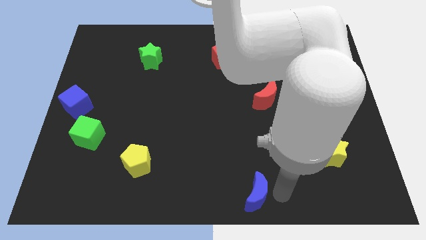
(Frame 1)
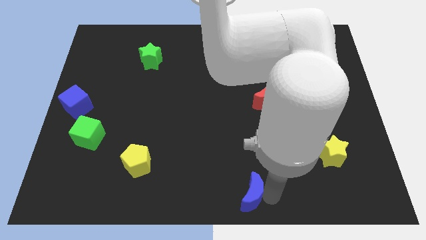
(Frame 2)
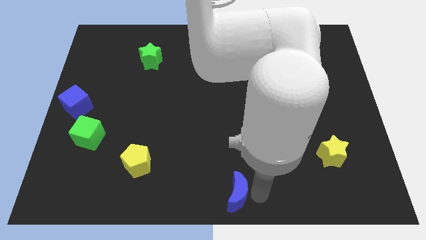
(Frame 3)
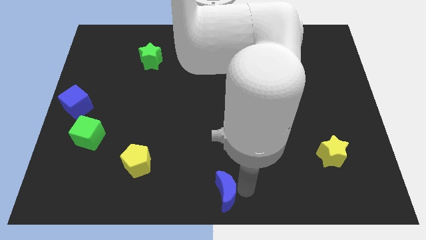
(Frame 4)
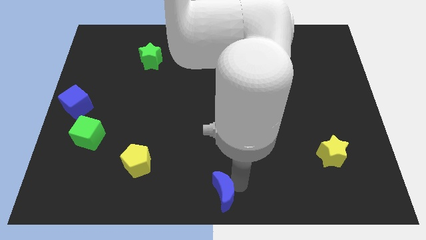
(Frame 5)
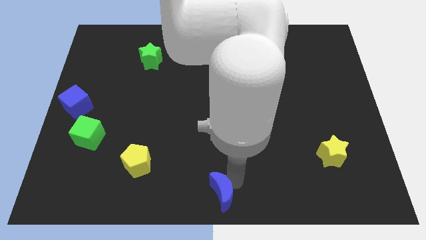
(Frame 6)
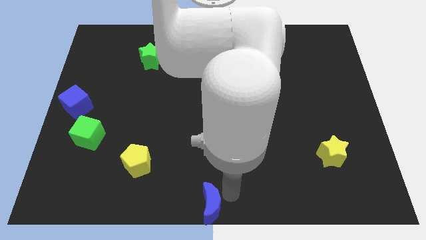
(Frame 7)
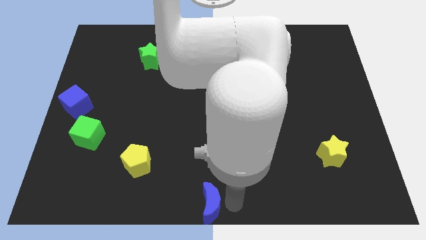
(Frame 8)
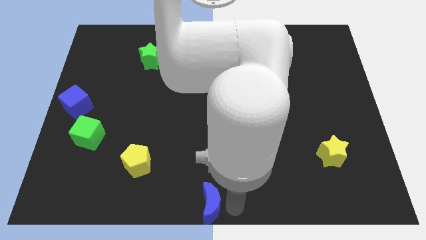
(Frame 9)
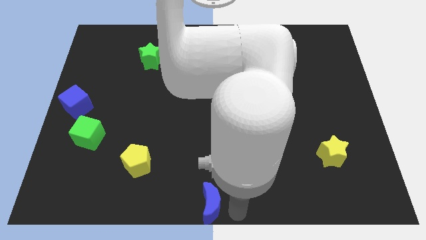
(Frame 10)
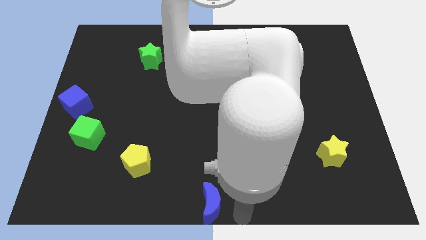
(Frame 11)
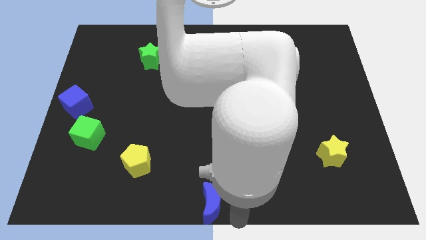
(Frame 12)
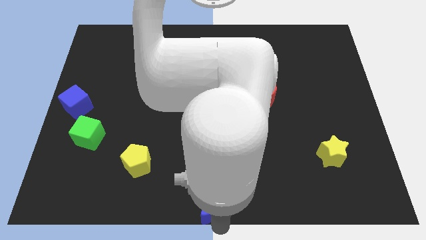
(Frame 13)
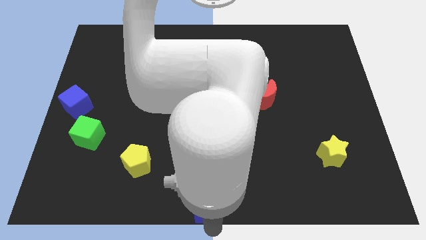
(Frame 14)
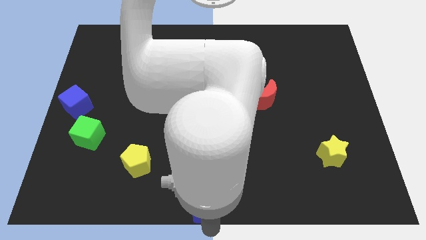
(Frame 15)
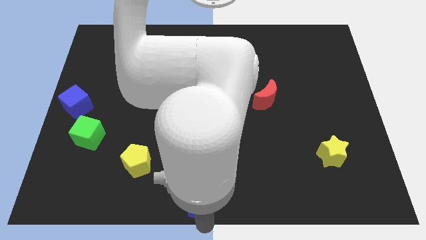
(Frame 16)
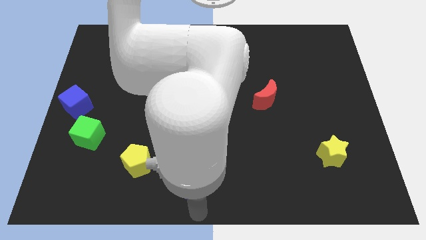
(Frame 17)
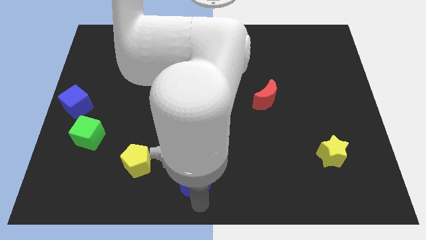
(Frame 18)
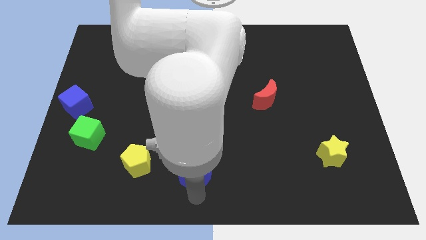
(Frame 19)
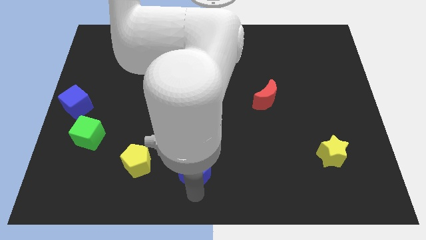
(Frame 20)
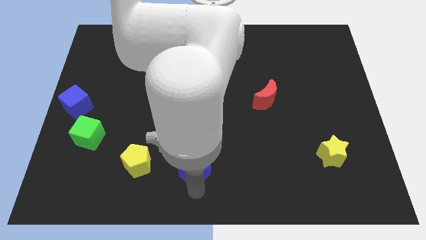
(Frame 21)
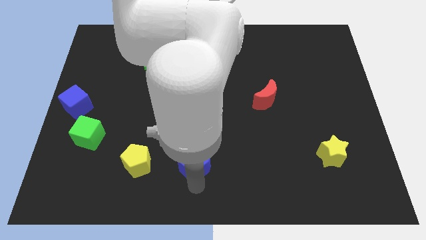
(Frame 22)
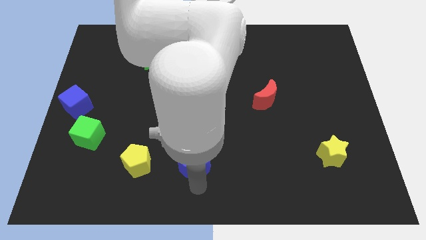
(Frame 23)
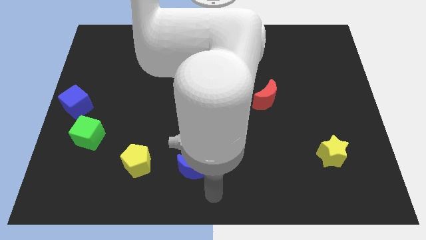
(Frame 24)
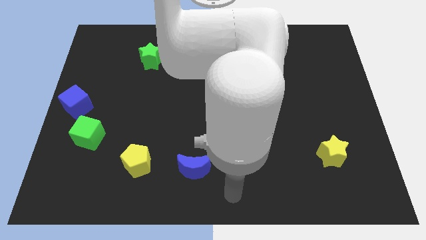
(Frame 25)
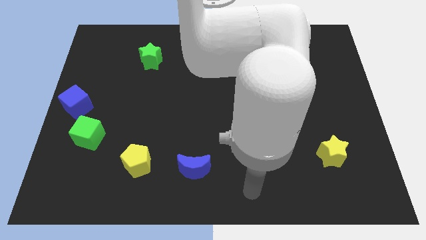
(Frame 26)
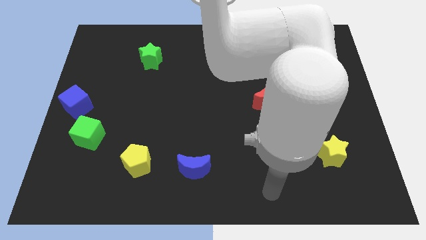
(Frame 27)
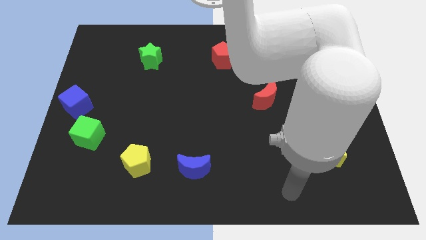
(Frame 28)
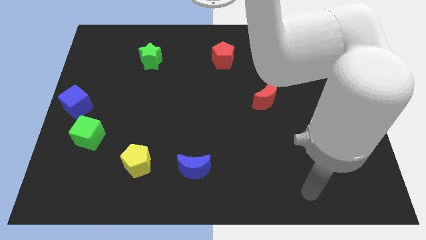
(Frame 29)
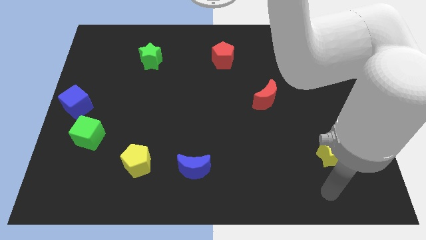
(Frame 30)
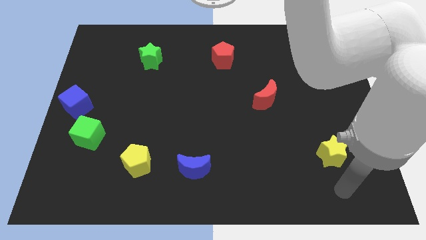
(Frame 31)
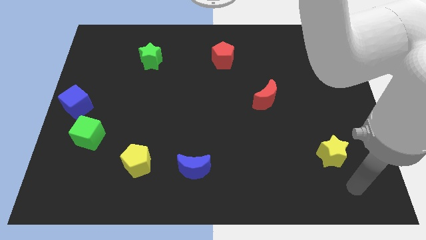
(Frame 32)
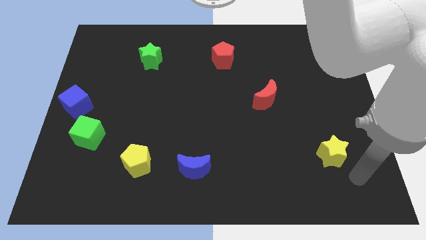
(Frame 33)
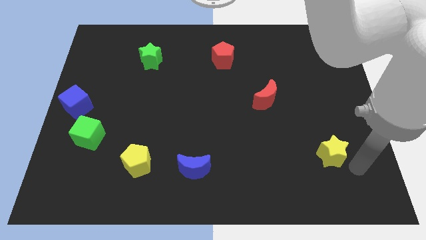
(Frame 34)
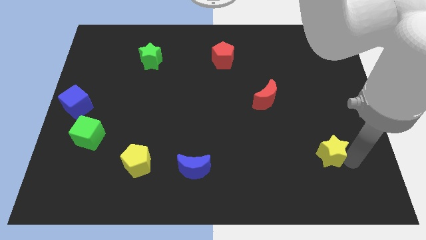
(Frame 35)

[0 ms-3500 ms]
place the blue crescent to the right side of the yellow pentagon

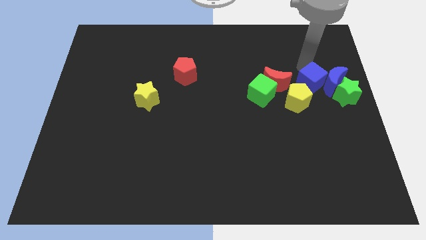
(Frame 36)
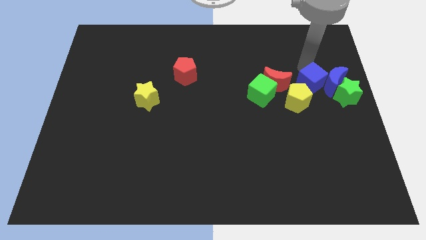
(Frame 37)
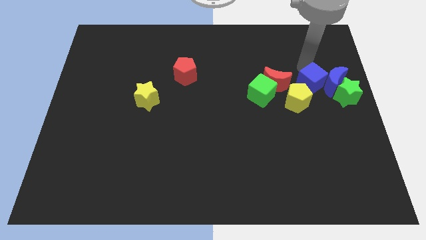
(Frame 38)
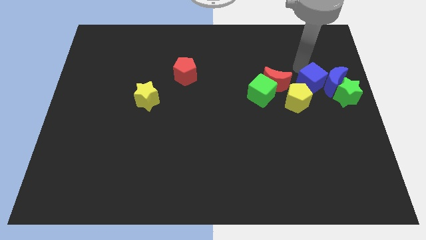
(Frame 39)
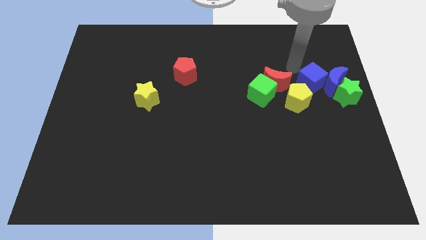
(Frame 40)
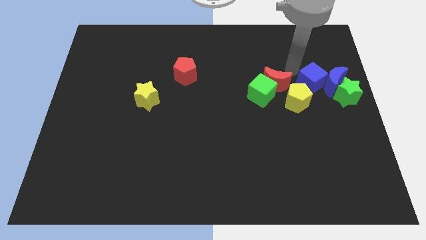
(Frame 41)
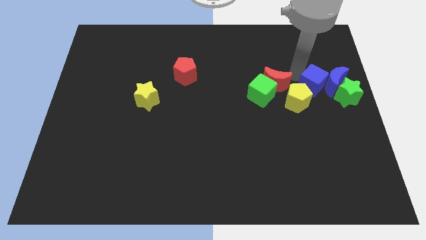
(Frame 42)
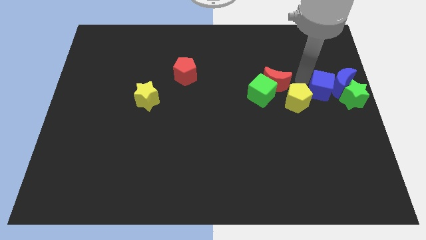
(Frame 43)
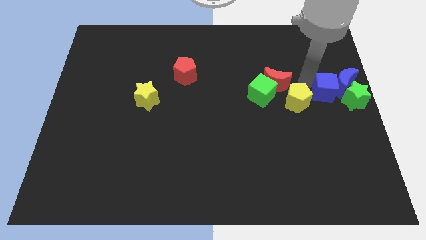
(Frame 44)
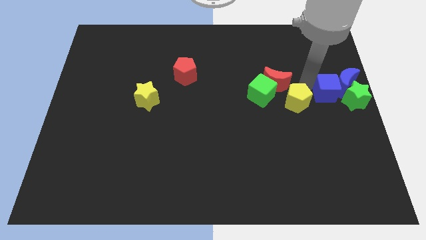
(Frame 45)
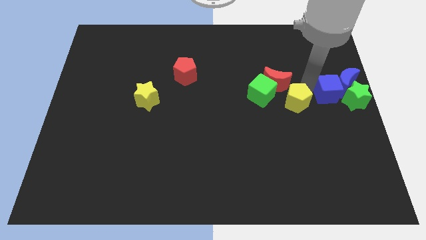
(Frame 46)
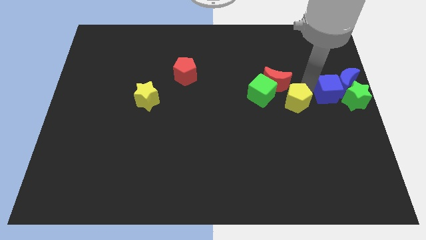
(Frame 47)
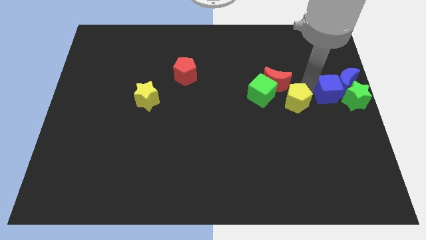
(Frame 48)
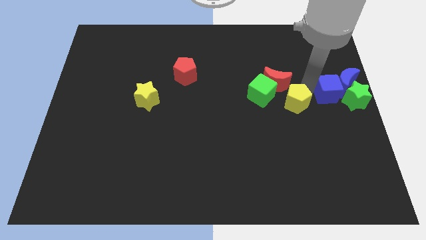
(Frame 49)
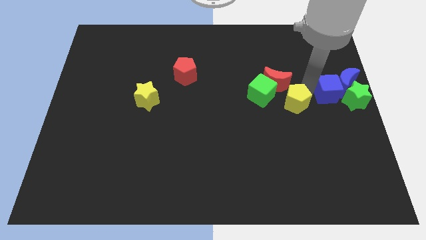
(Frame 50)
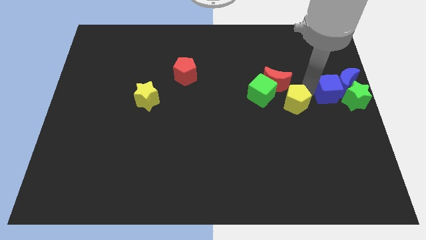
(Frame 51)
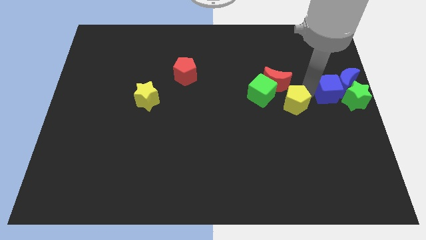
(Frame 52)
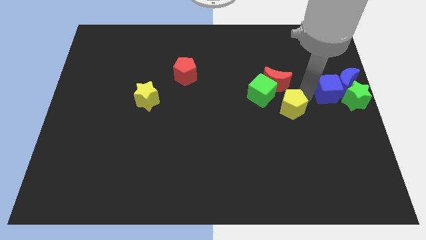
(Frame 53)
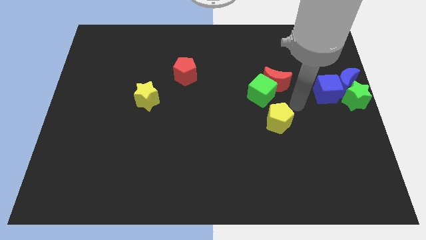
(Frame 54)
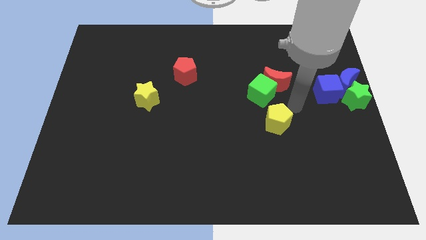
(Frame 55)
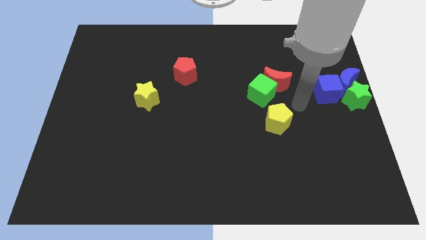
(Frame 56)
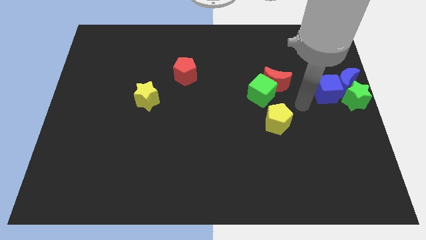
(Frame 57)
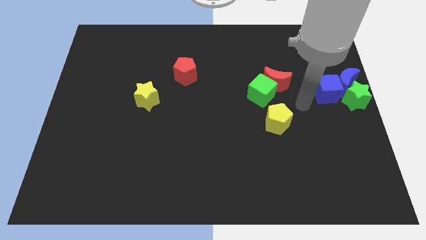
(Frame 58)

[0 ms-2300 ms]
move the yellow pentagon away from the blue cube

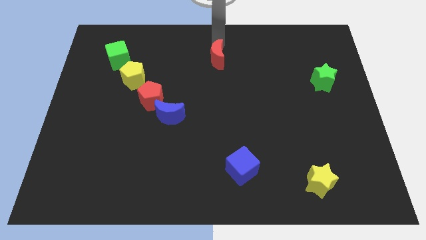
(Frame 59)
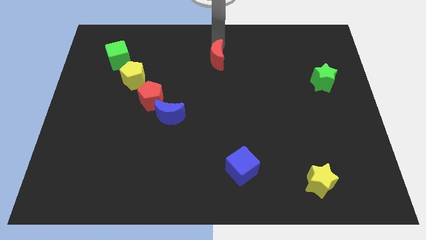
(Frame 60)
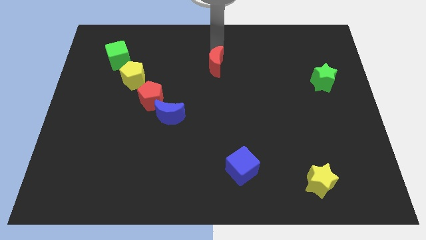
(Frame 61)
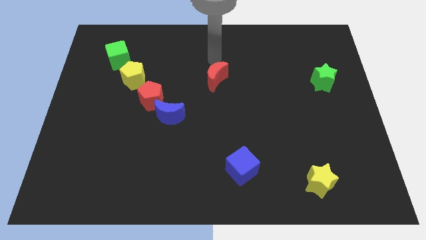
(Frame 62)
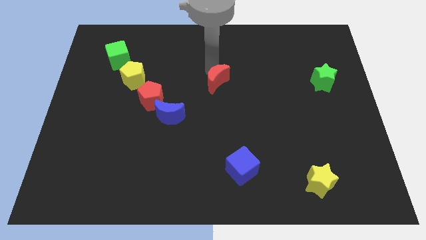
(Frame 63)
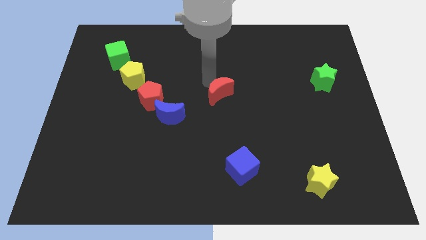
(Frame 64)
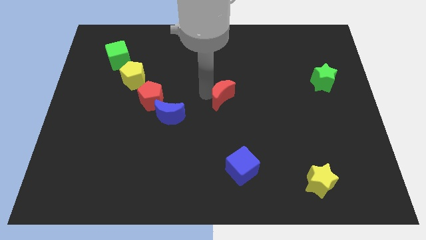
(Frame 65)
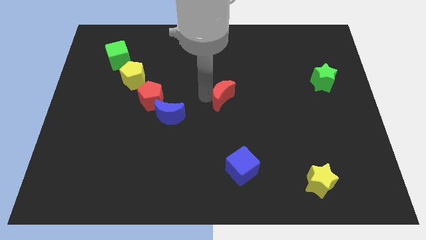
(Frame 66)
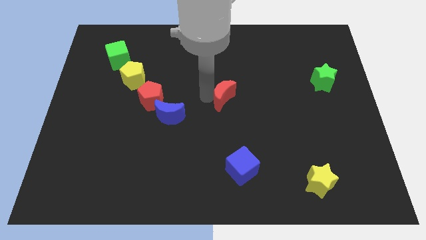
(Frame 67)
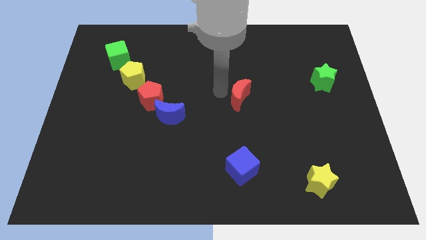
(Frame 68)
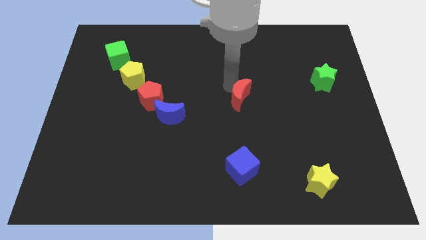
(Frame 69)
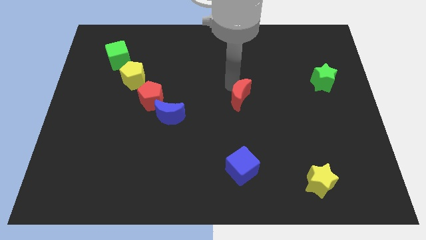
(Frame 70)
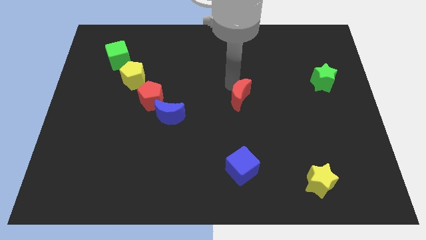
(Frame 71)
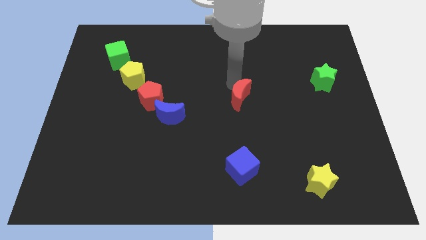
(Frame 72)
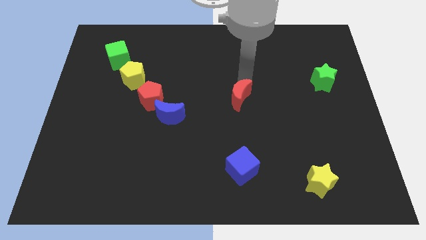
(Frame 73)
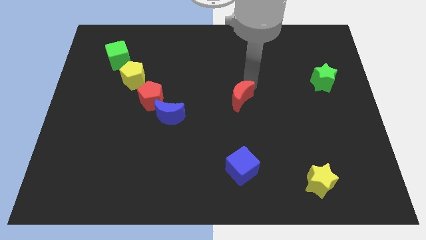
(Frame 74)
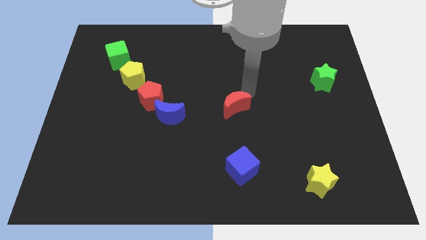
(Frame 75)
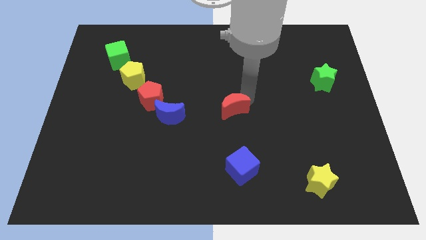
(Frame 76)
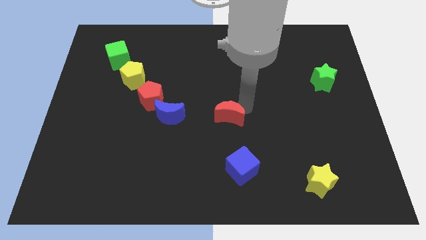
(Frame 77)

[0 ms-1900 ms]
place the red moon to the center of the board

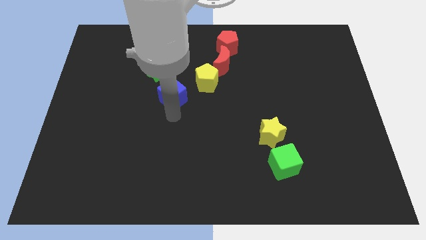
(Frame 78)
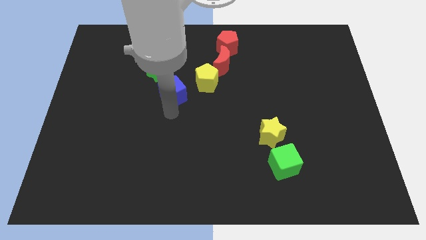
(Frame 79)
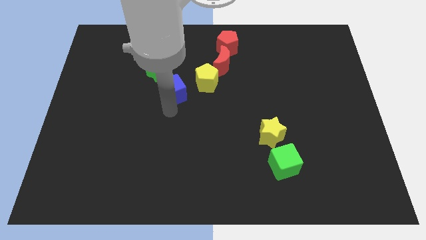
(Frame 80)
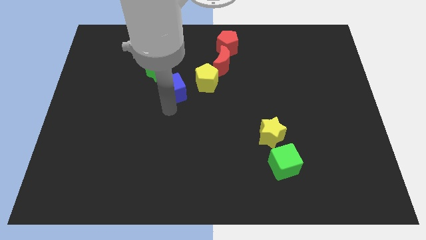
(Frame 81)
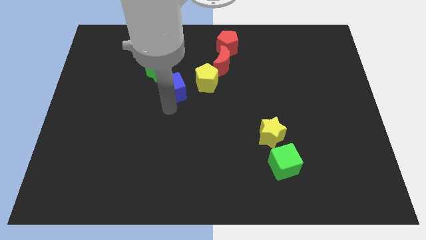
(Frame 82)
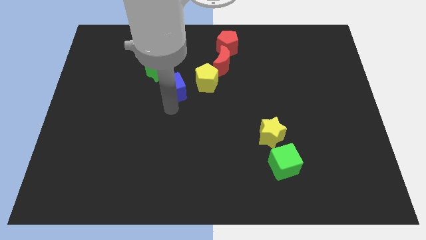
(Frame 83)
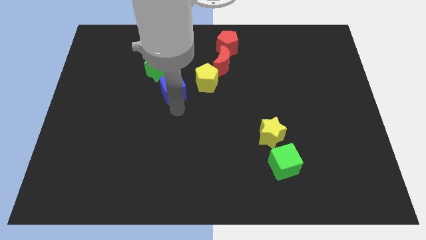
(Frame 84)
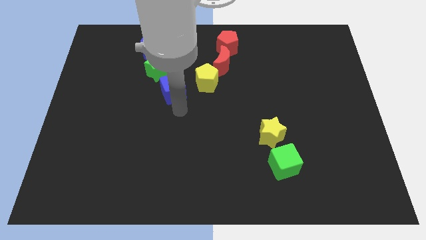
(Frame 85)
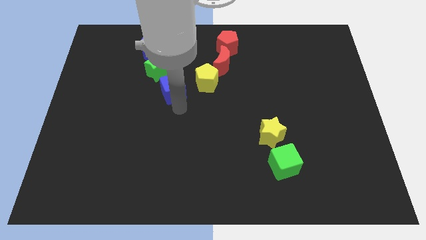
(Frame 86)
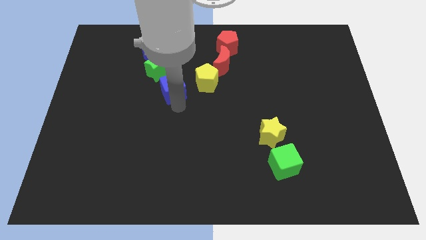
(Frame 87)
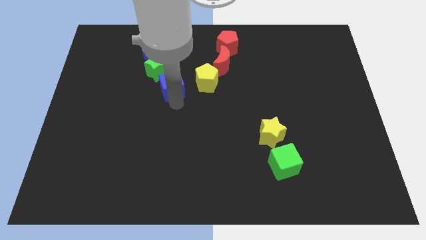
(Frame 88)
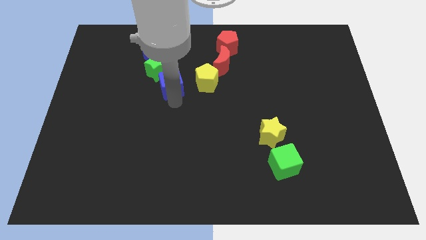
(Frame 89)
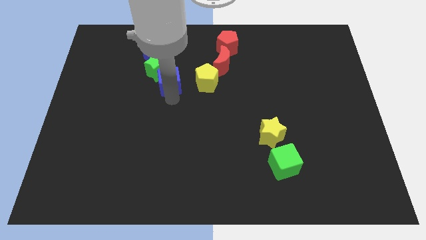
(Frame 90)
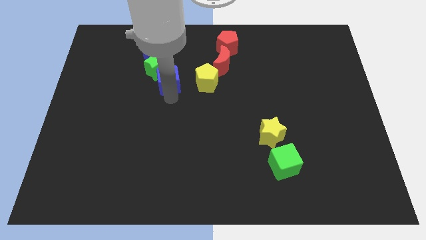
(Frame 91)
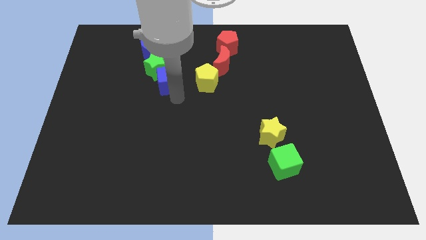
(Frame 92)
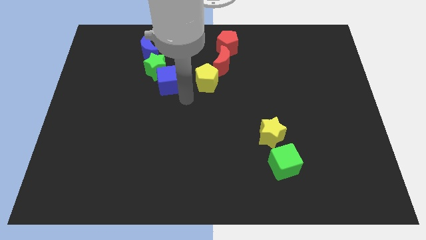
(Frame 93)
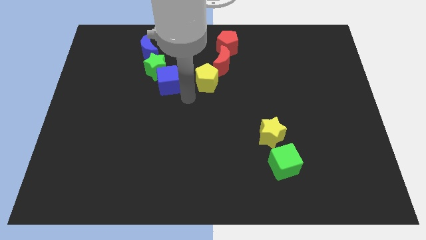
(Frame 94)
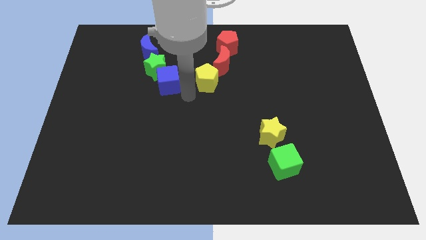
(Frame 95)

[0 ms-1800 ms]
slide the blue cube into the green star
